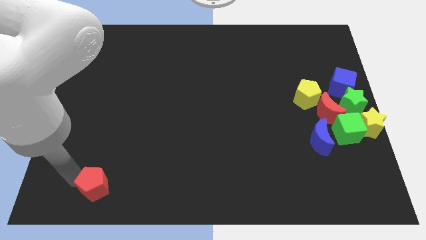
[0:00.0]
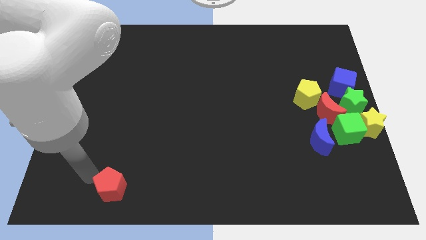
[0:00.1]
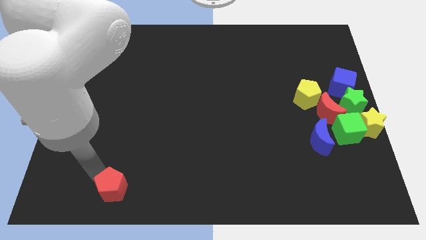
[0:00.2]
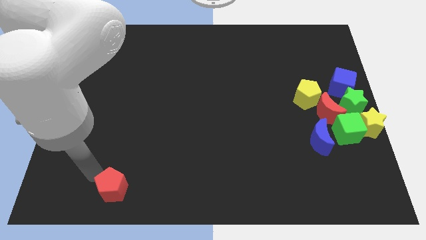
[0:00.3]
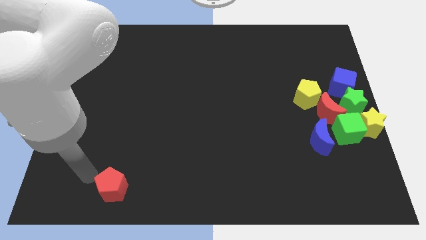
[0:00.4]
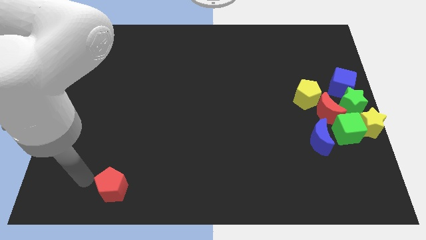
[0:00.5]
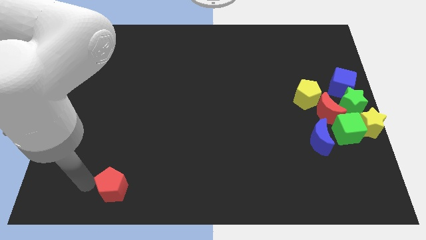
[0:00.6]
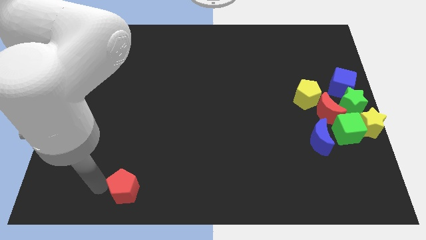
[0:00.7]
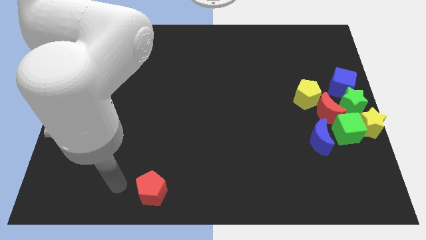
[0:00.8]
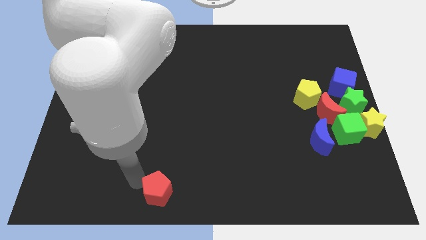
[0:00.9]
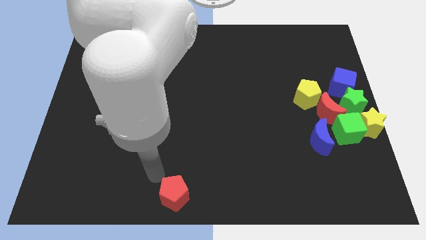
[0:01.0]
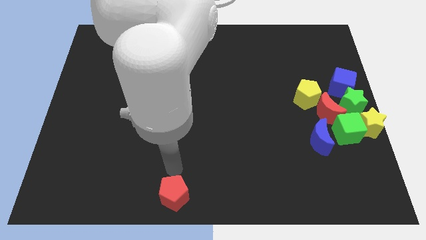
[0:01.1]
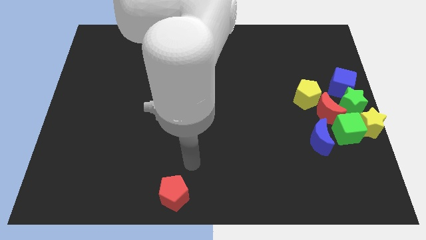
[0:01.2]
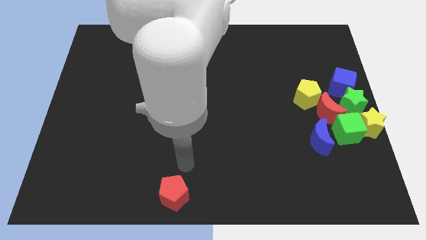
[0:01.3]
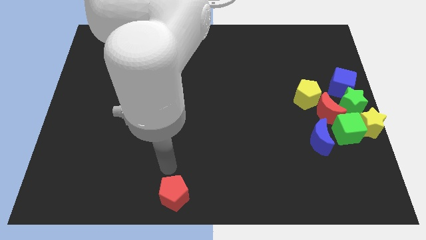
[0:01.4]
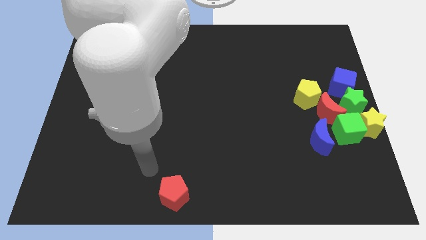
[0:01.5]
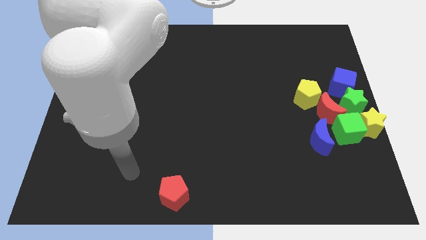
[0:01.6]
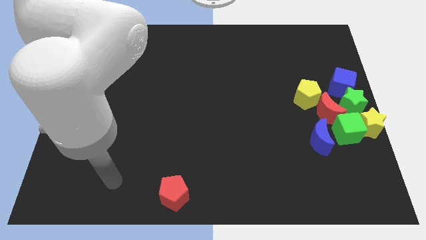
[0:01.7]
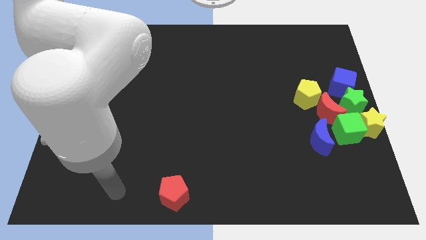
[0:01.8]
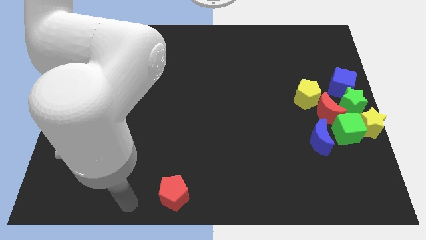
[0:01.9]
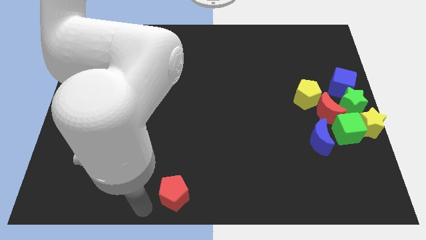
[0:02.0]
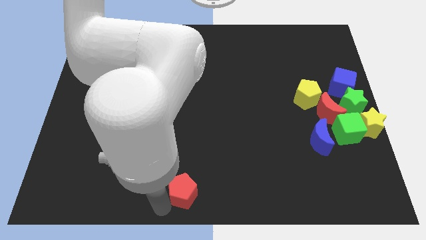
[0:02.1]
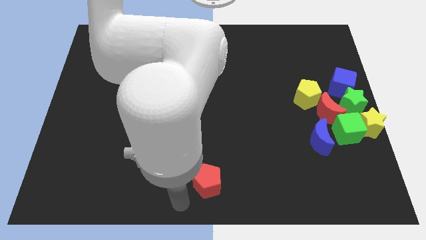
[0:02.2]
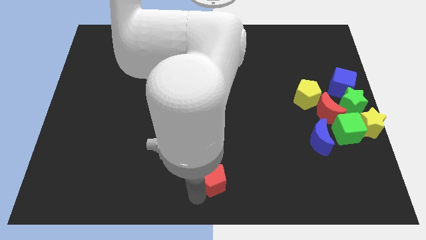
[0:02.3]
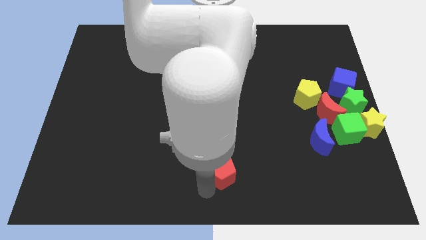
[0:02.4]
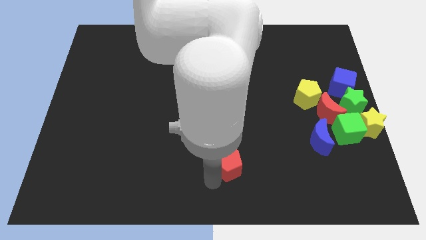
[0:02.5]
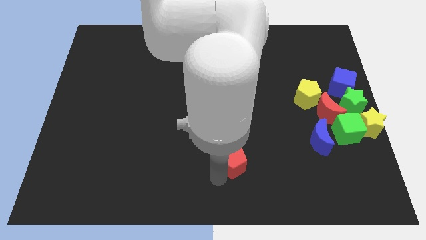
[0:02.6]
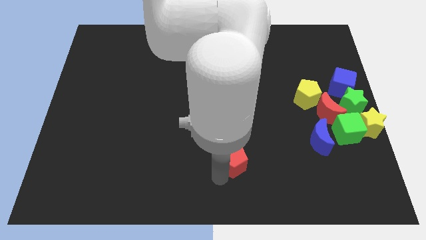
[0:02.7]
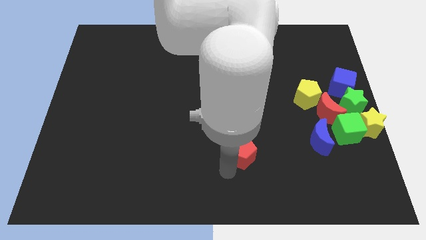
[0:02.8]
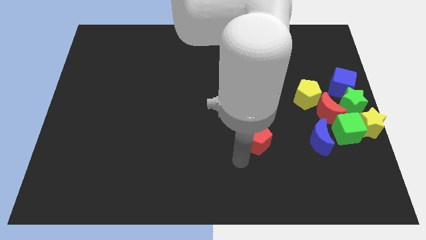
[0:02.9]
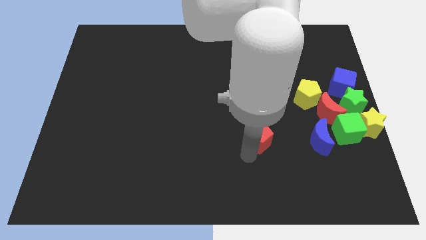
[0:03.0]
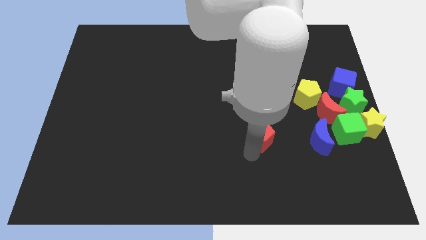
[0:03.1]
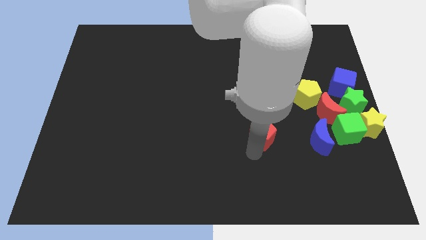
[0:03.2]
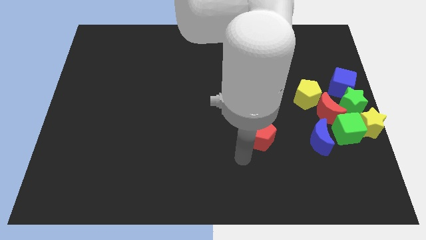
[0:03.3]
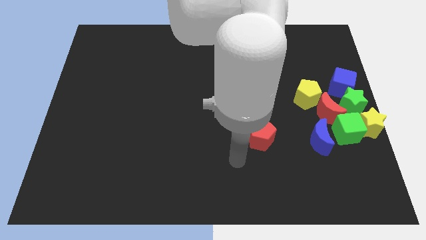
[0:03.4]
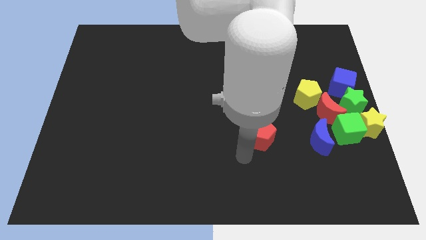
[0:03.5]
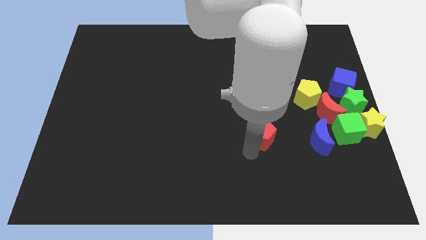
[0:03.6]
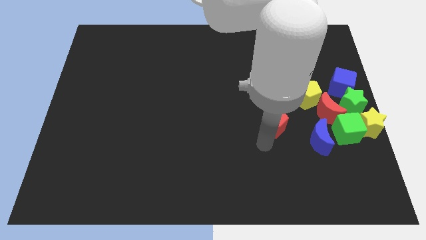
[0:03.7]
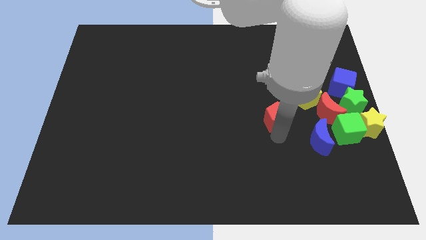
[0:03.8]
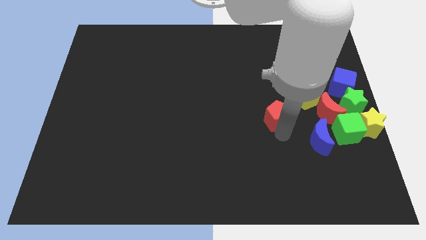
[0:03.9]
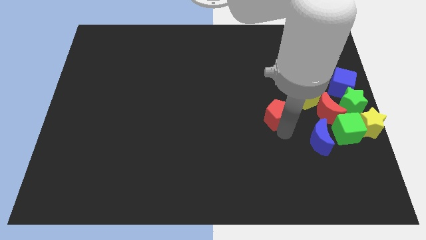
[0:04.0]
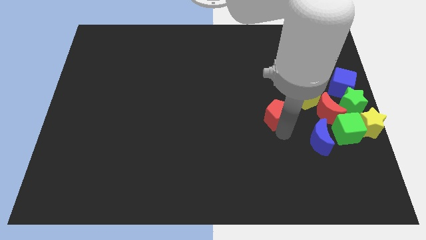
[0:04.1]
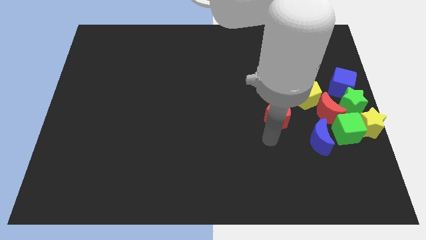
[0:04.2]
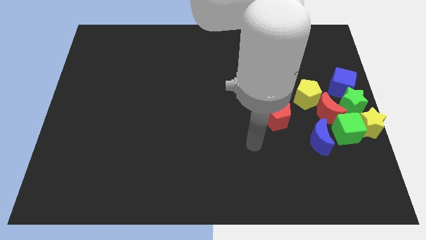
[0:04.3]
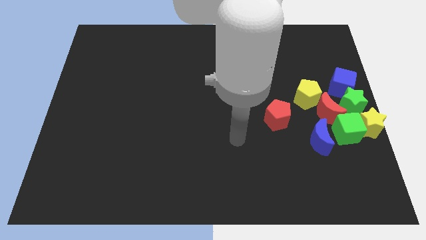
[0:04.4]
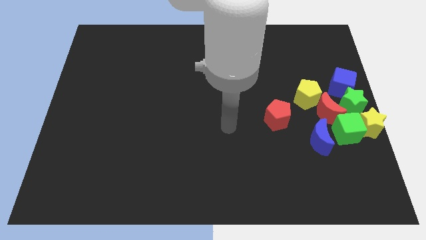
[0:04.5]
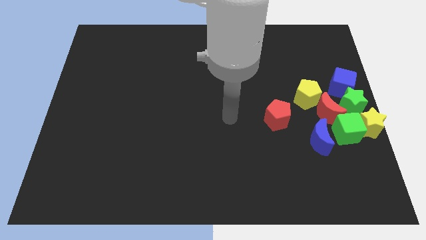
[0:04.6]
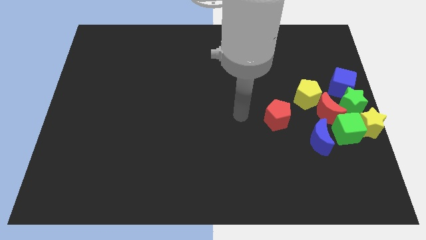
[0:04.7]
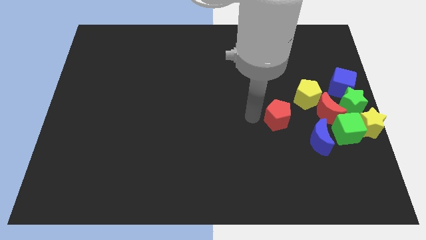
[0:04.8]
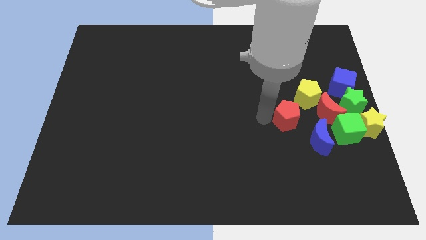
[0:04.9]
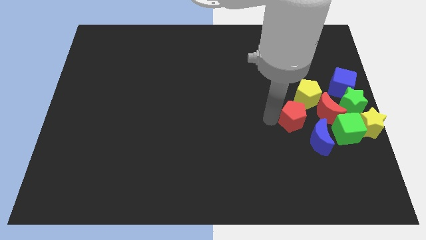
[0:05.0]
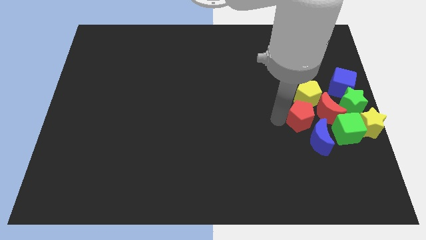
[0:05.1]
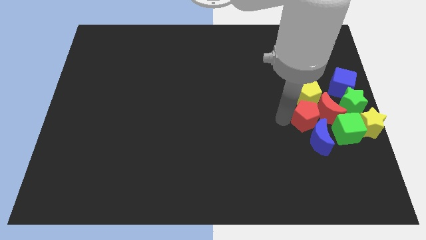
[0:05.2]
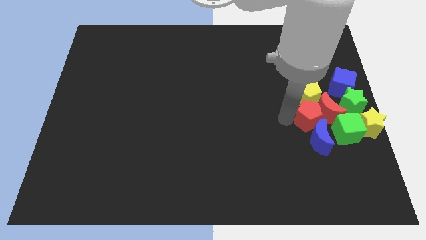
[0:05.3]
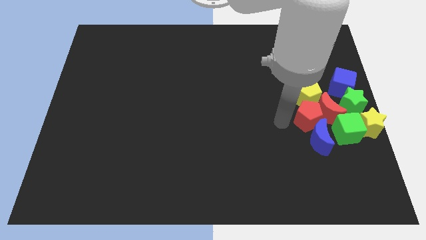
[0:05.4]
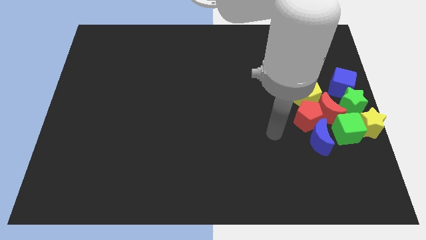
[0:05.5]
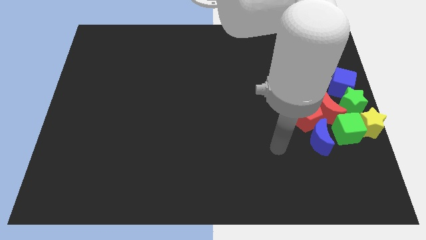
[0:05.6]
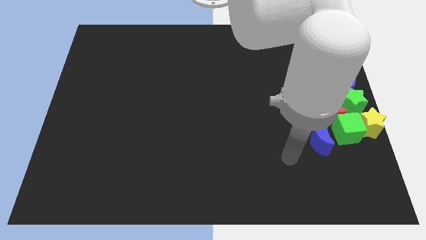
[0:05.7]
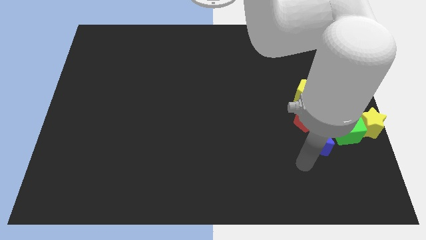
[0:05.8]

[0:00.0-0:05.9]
move the red pentagon into the group of blocks

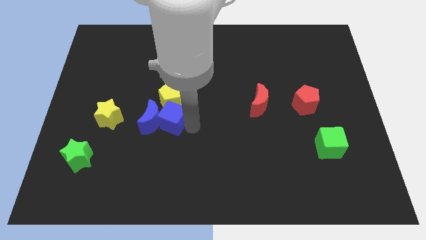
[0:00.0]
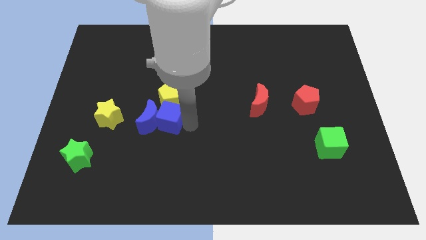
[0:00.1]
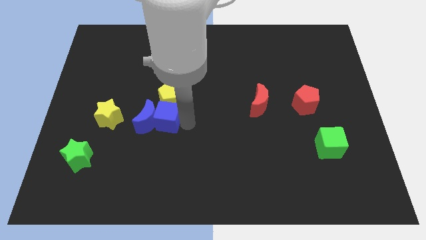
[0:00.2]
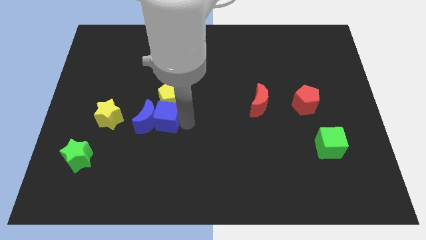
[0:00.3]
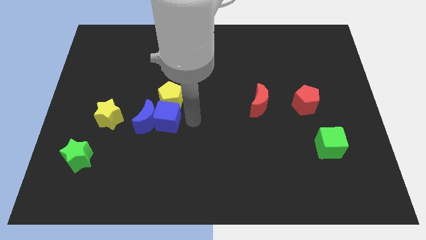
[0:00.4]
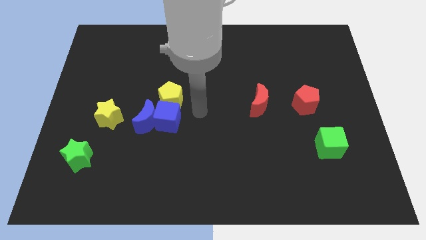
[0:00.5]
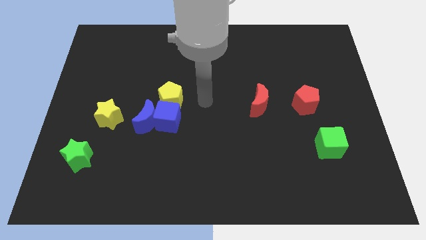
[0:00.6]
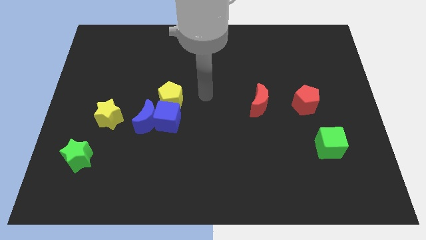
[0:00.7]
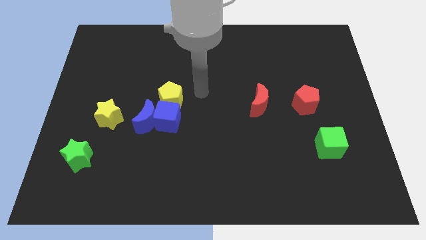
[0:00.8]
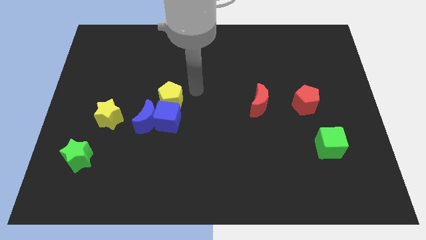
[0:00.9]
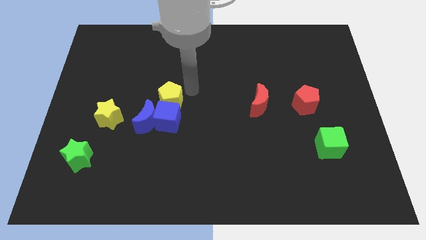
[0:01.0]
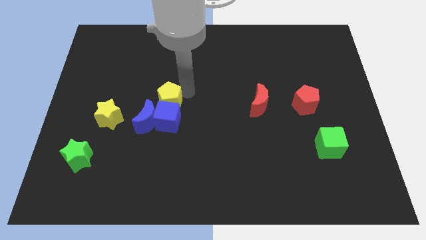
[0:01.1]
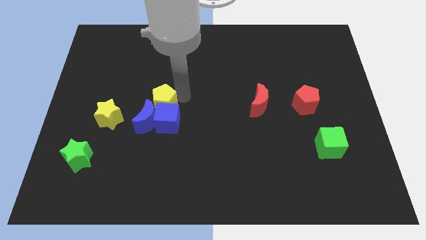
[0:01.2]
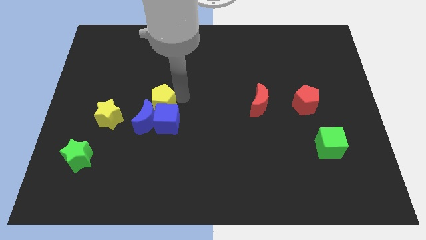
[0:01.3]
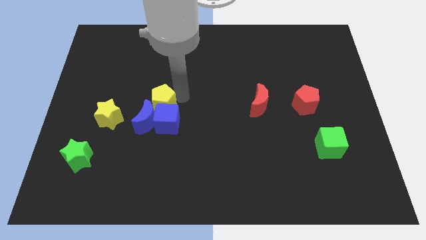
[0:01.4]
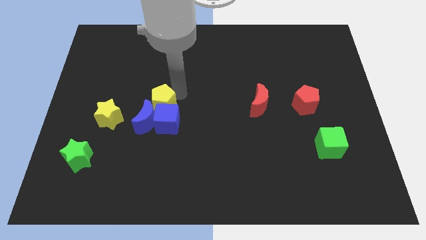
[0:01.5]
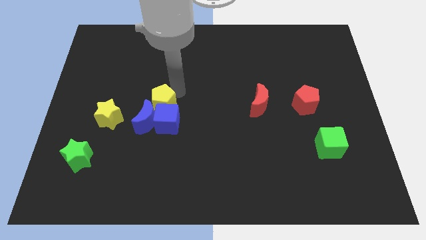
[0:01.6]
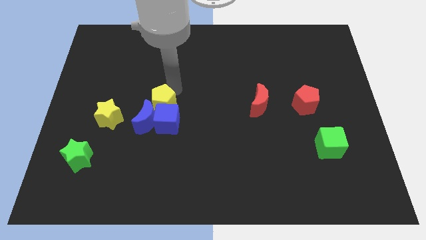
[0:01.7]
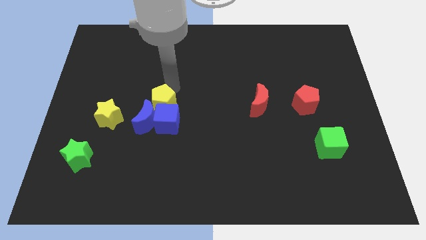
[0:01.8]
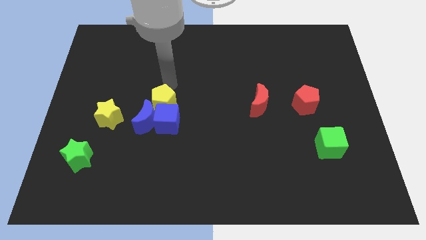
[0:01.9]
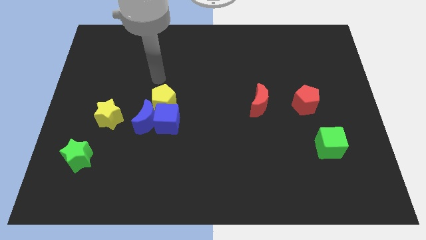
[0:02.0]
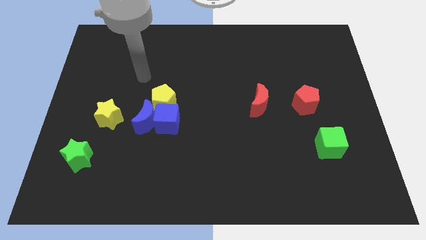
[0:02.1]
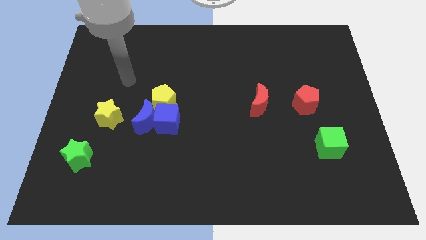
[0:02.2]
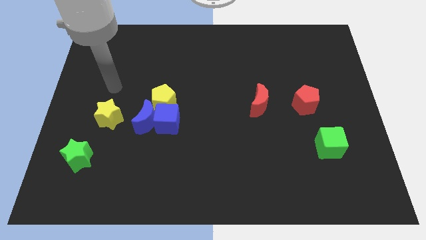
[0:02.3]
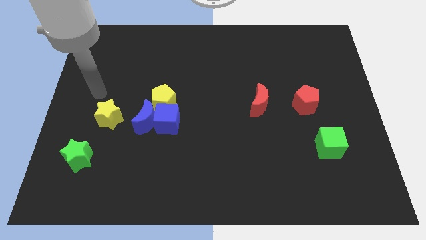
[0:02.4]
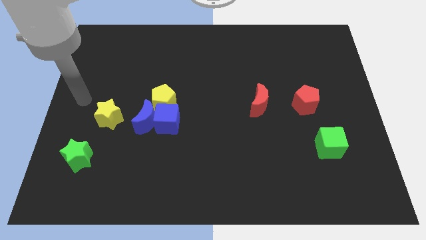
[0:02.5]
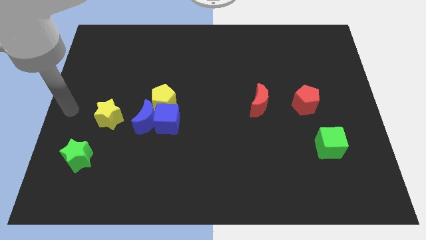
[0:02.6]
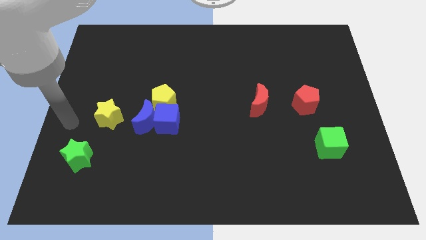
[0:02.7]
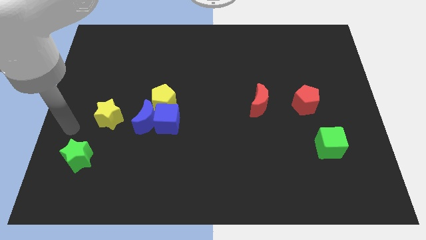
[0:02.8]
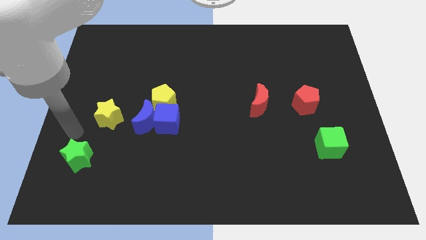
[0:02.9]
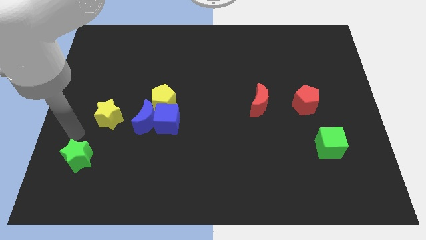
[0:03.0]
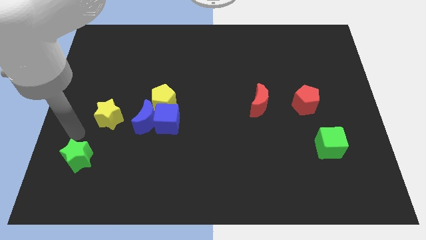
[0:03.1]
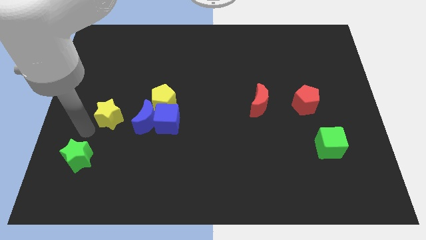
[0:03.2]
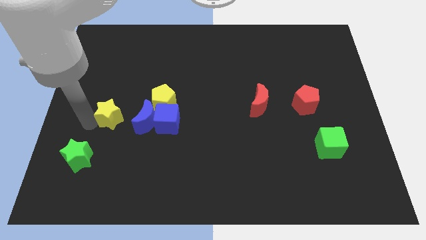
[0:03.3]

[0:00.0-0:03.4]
place the arm to the left of the yellow star
